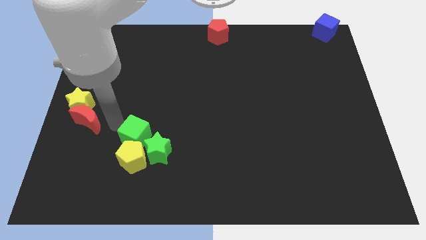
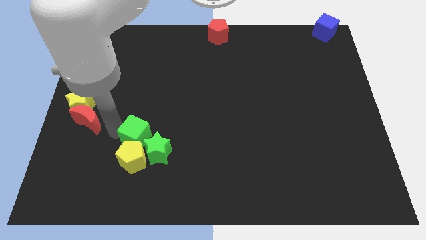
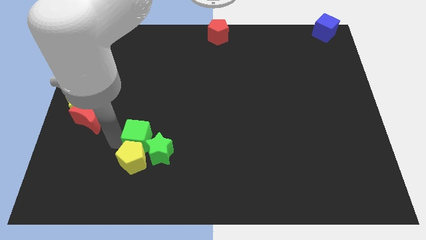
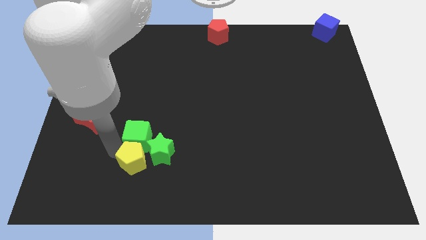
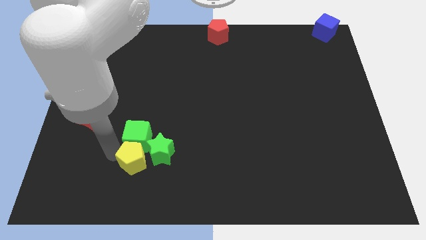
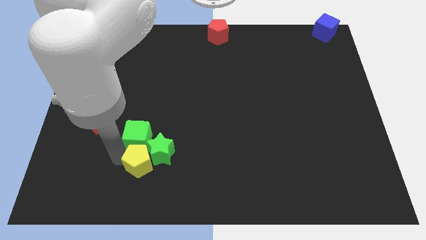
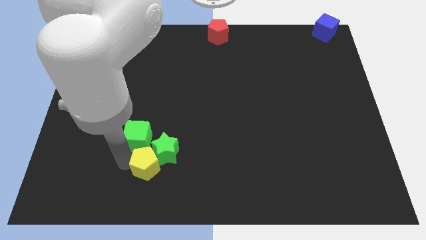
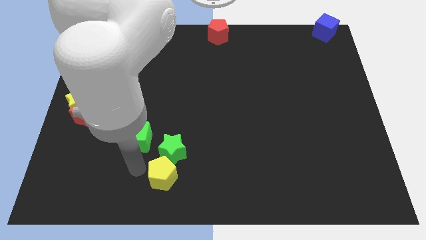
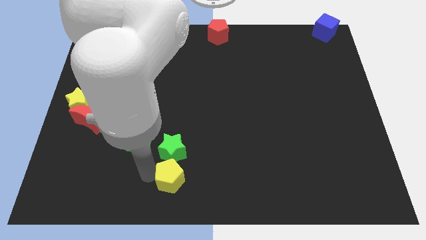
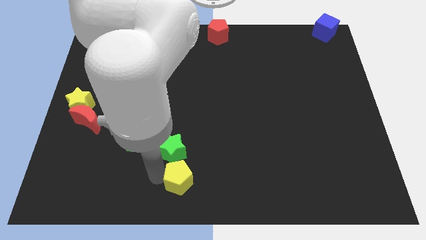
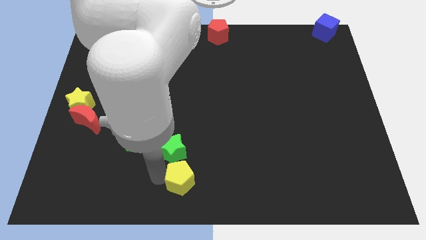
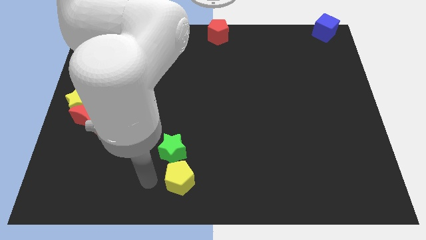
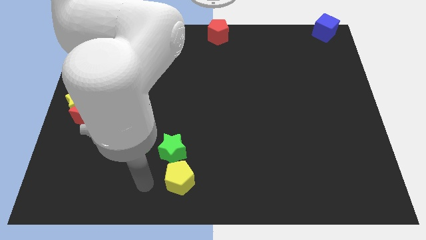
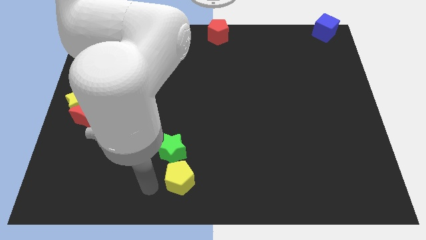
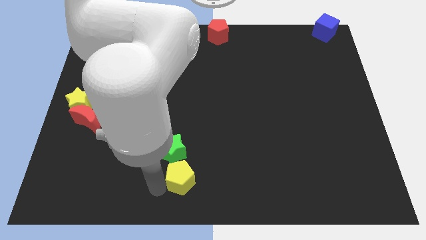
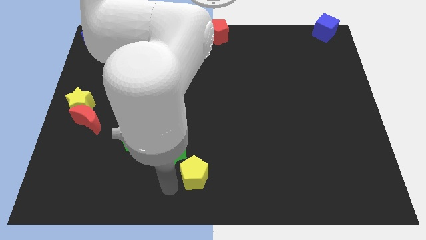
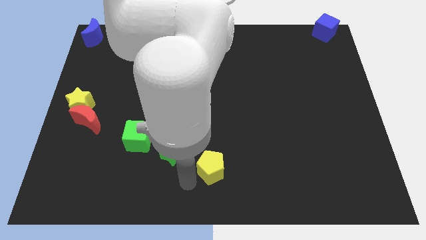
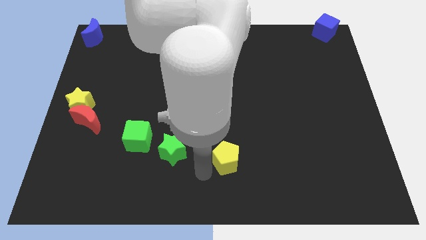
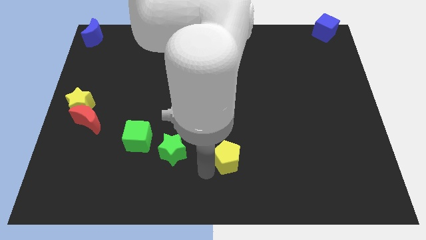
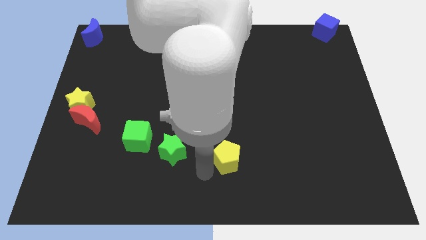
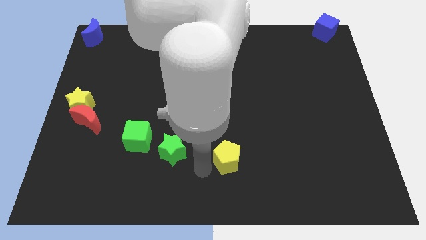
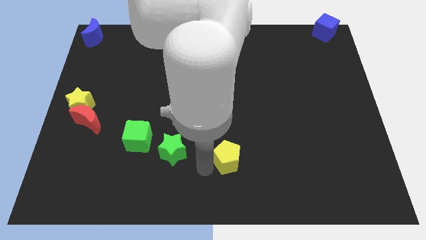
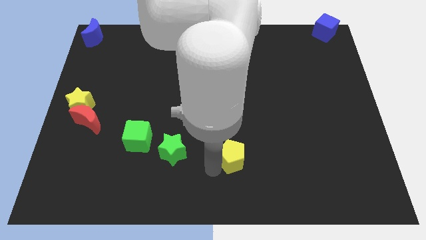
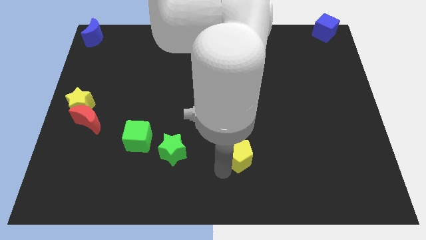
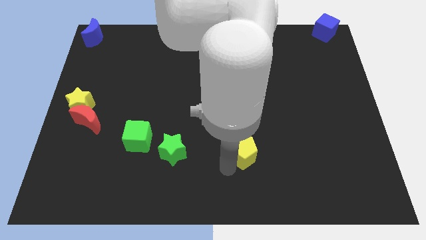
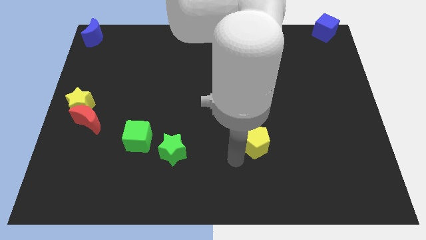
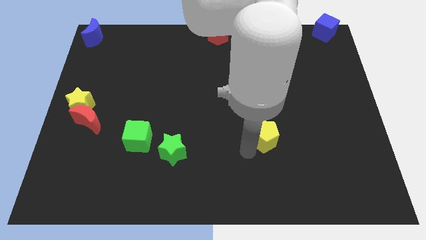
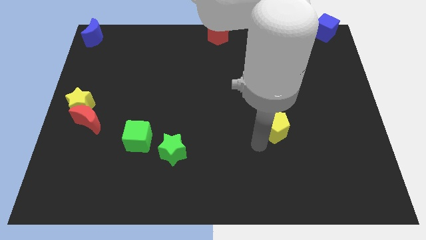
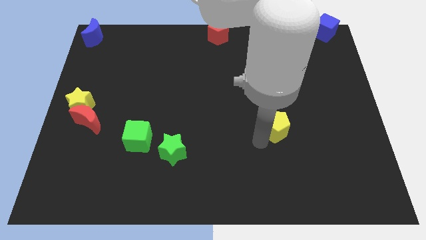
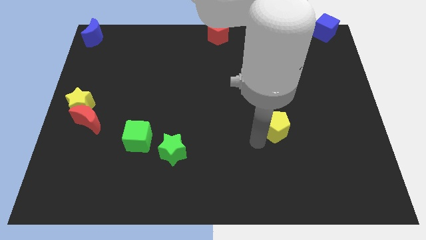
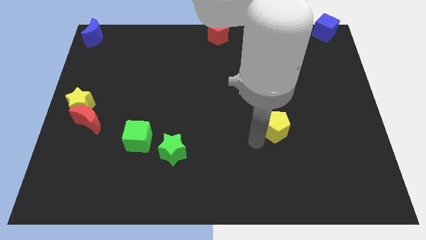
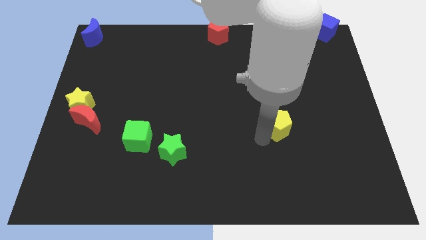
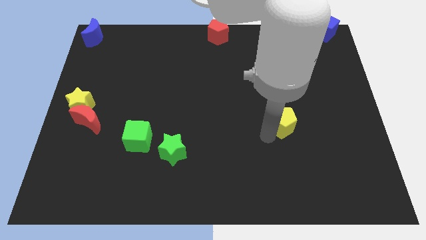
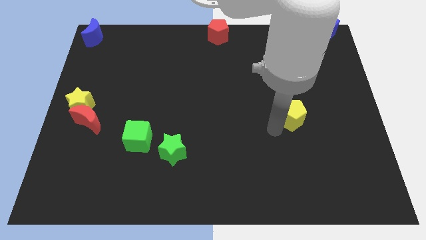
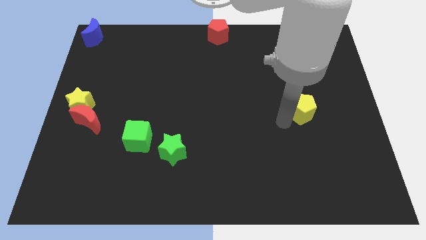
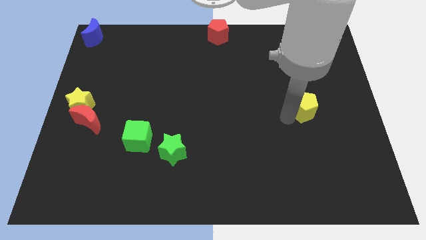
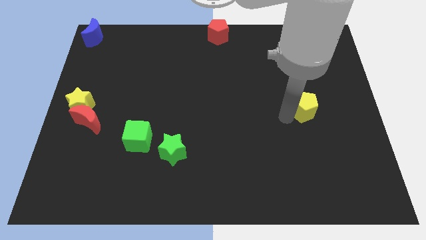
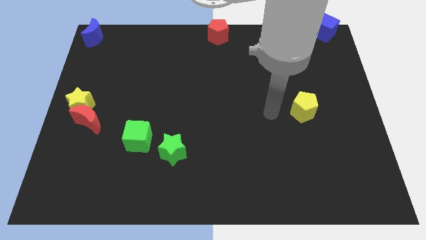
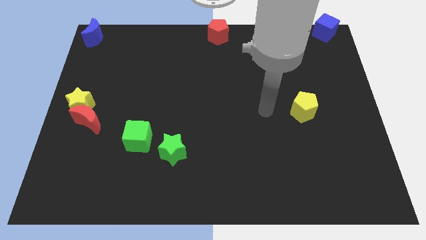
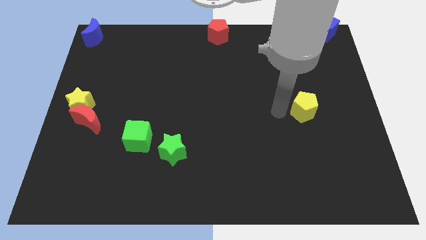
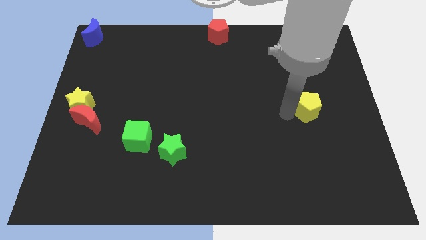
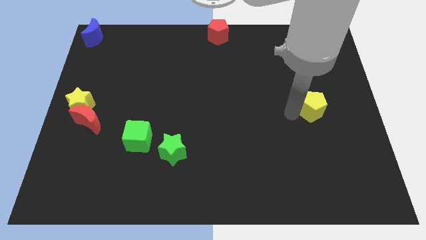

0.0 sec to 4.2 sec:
move the yellow pentagon towards the right side of the board

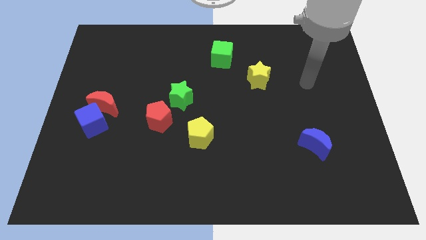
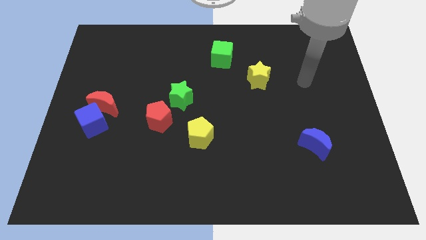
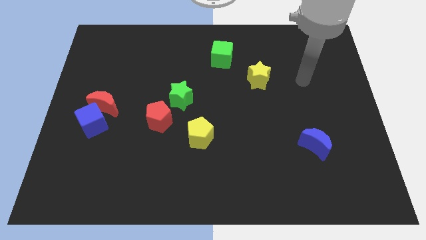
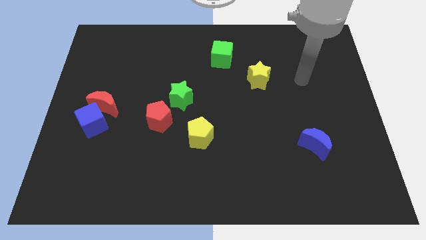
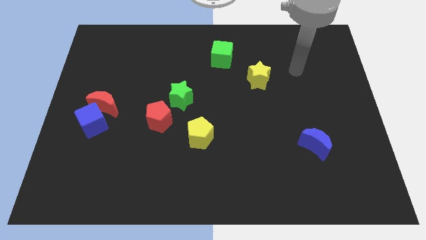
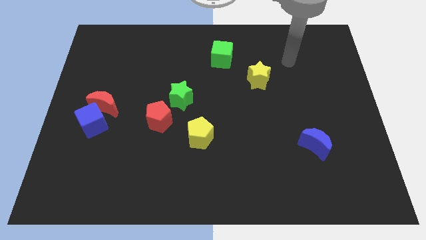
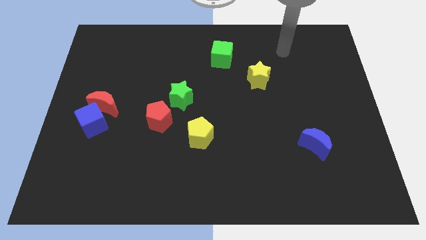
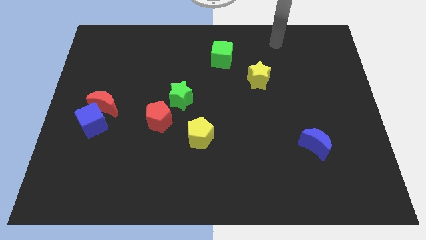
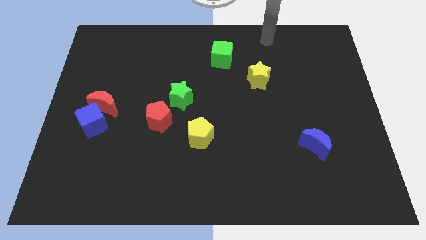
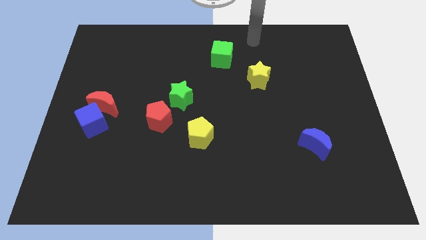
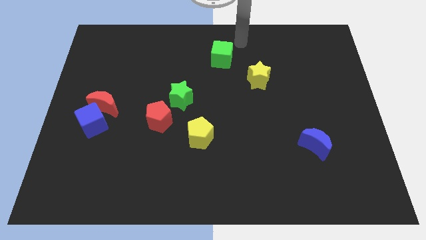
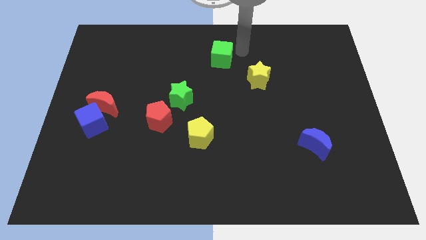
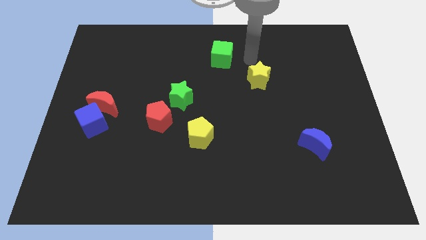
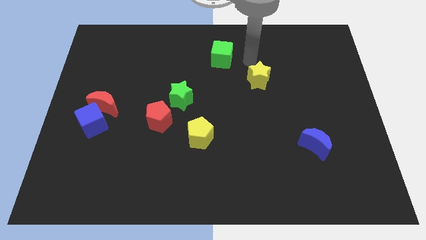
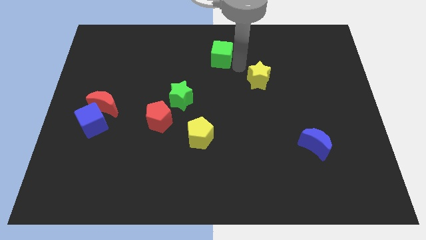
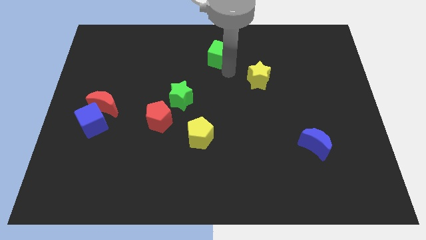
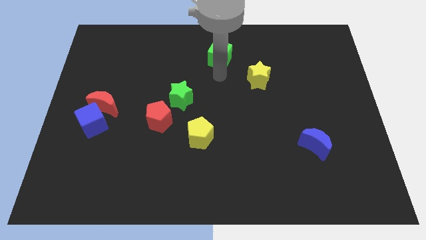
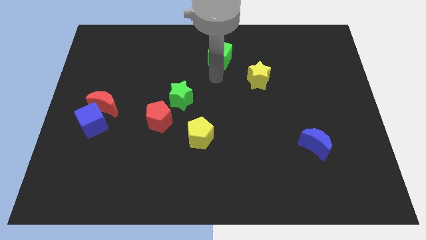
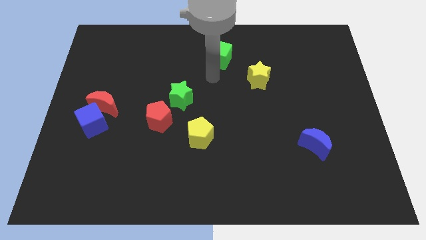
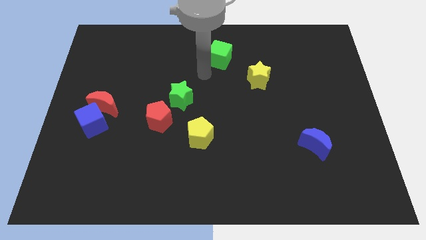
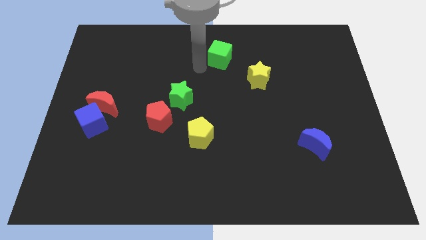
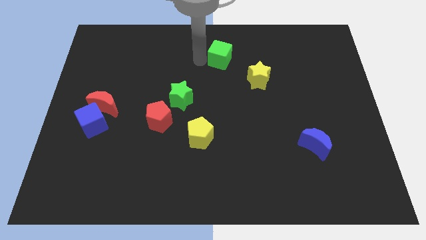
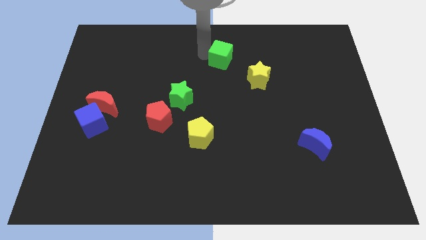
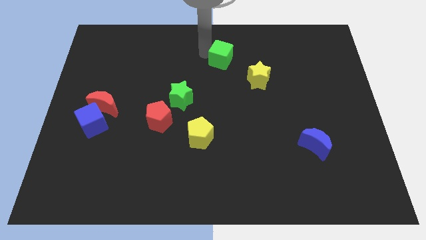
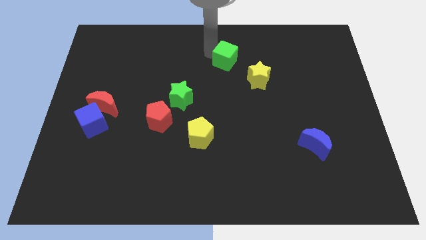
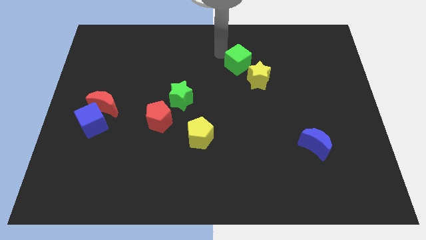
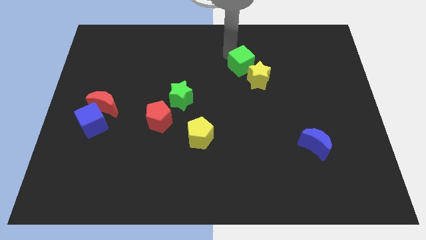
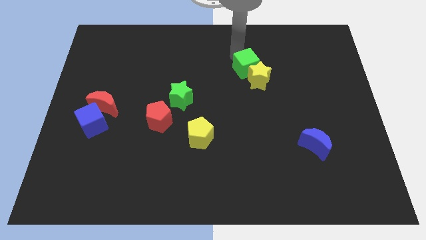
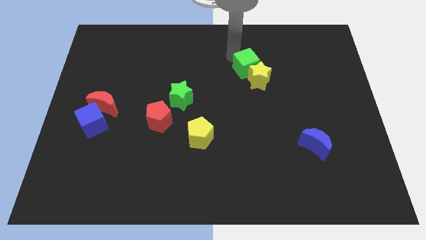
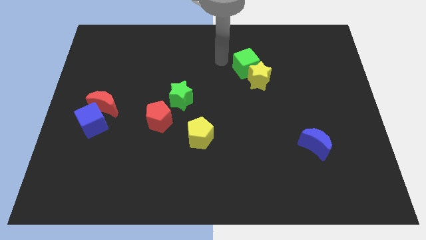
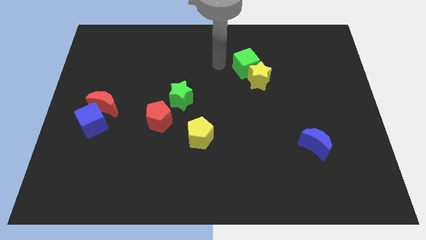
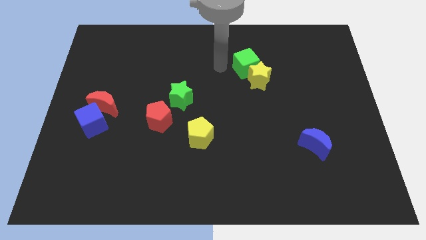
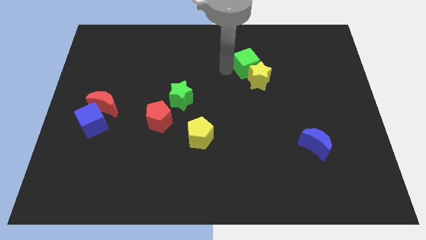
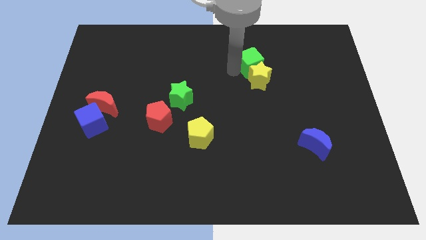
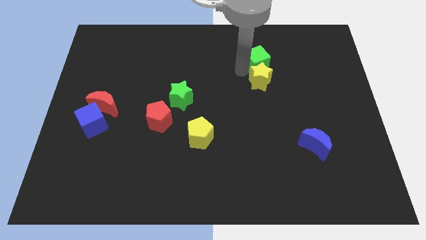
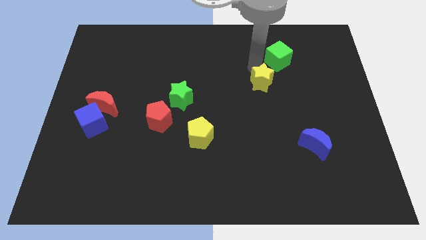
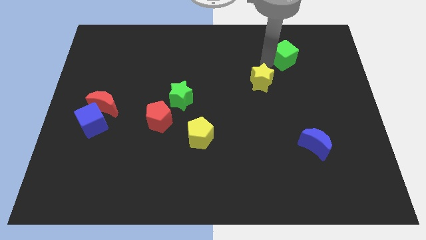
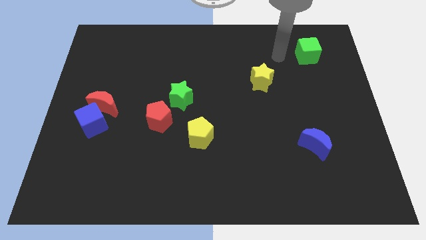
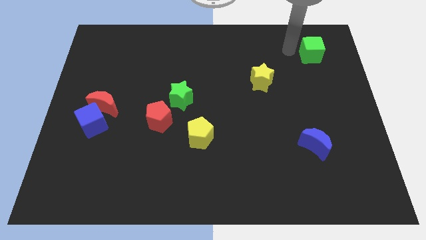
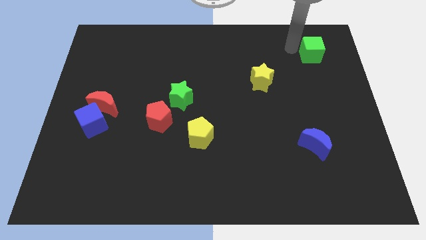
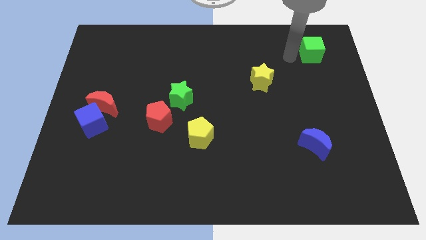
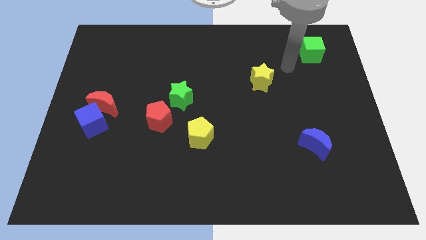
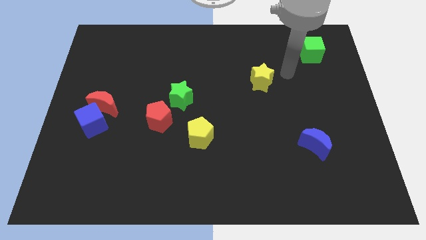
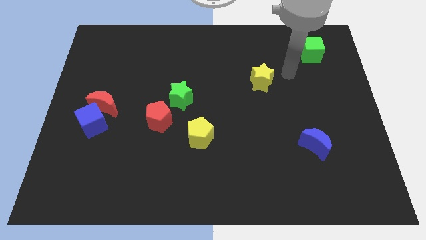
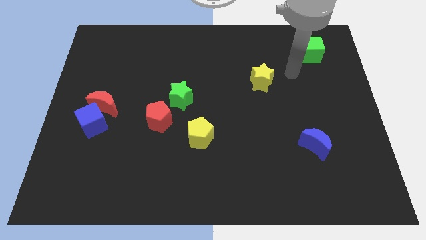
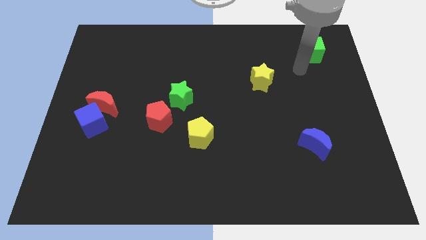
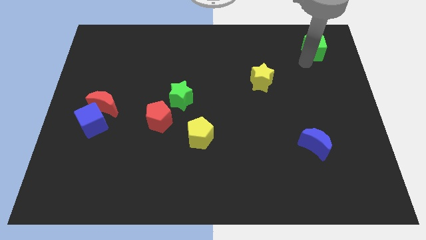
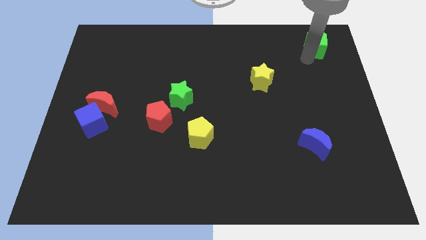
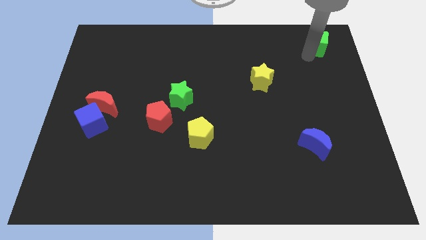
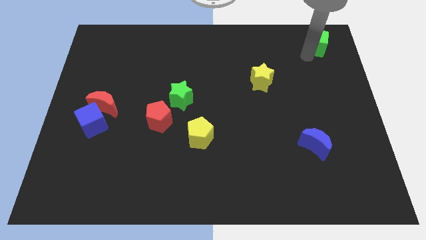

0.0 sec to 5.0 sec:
push the green cube towards the top right of the board
